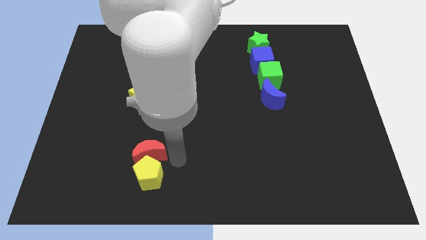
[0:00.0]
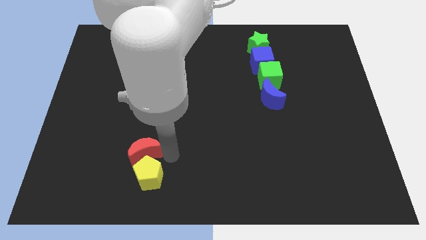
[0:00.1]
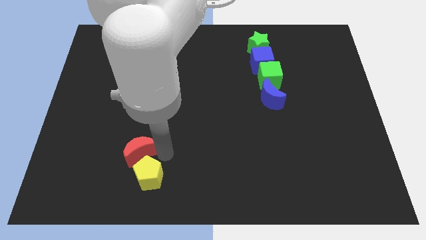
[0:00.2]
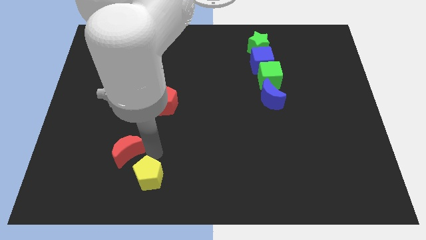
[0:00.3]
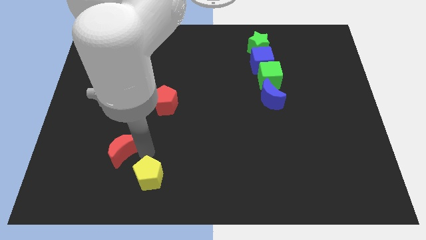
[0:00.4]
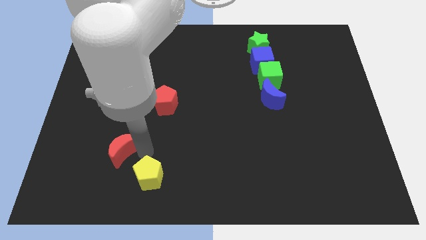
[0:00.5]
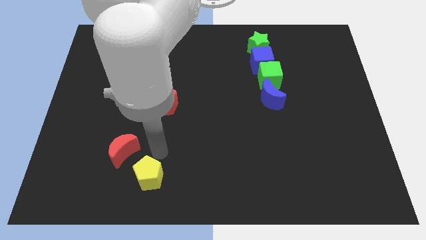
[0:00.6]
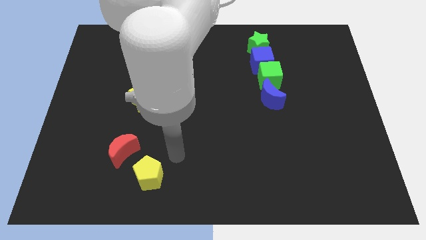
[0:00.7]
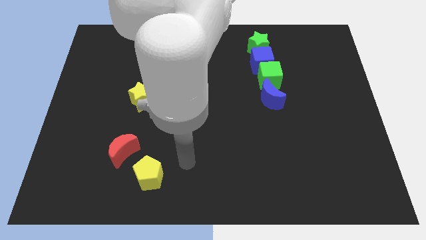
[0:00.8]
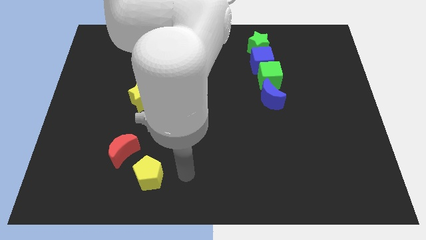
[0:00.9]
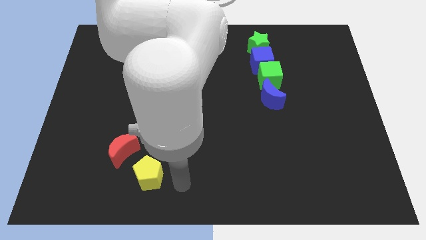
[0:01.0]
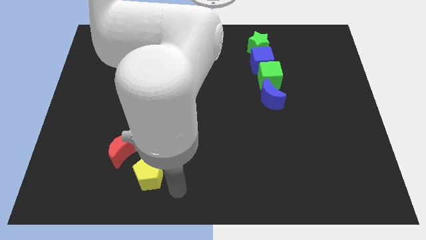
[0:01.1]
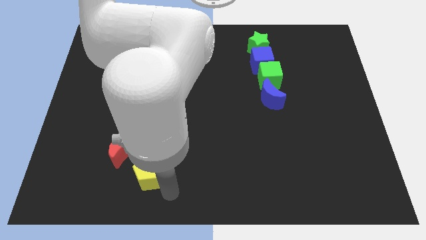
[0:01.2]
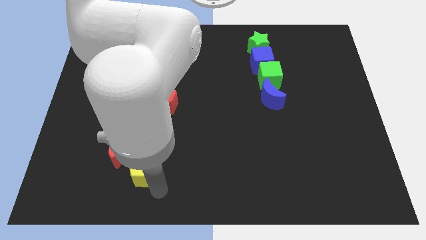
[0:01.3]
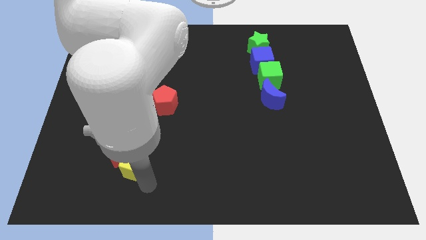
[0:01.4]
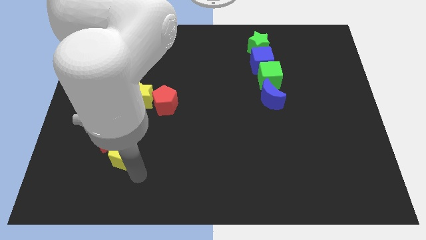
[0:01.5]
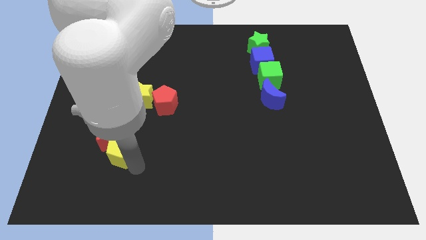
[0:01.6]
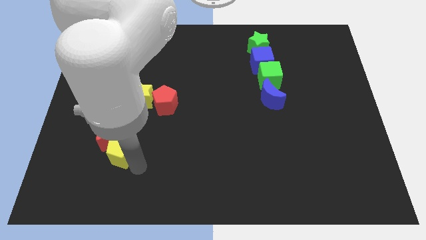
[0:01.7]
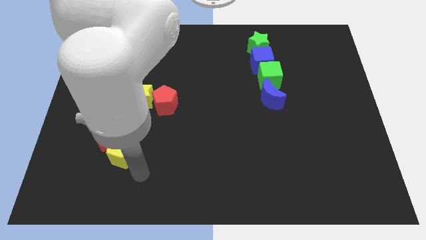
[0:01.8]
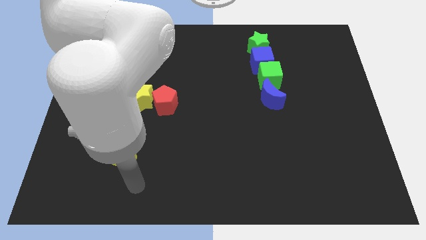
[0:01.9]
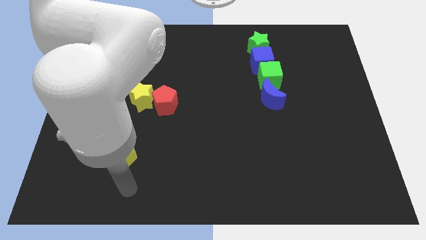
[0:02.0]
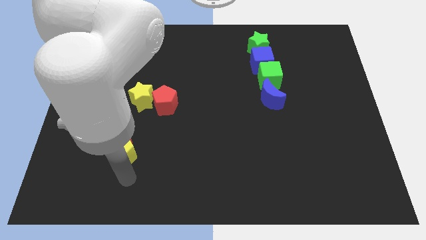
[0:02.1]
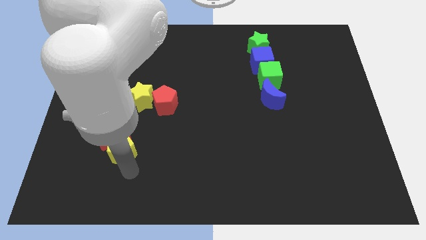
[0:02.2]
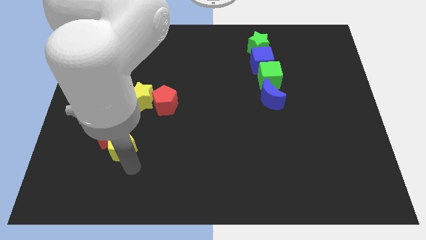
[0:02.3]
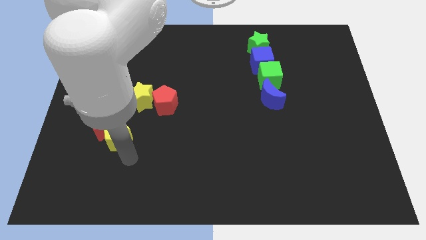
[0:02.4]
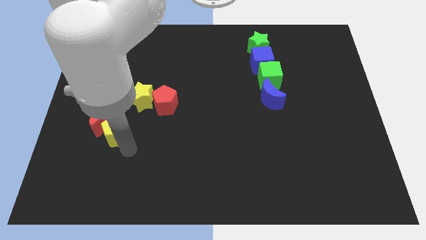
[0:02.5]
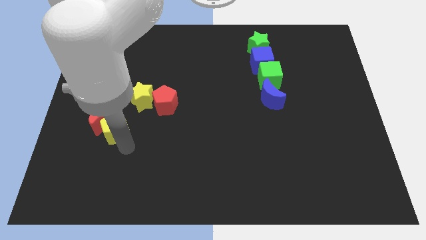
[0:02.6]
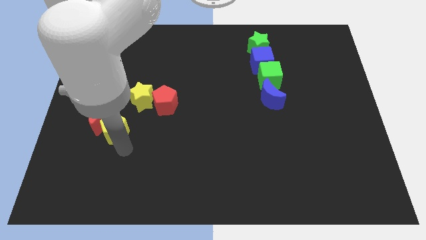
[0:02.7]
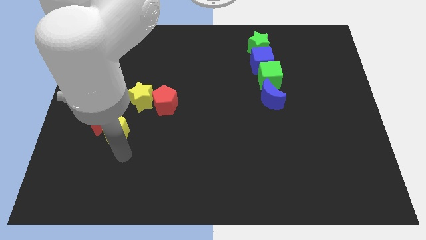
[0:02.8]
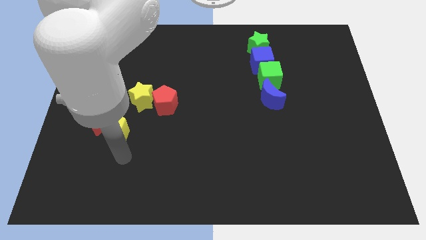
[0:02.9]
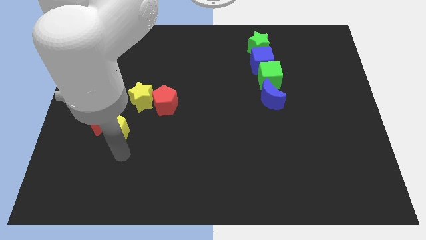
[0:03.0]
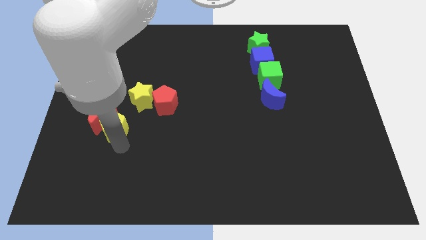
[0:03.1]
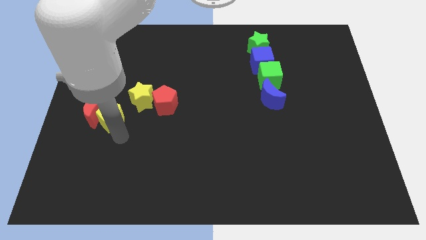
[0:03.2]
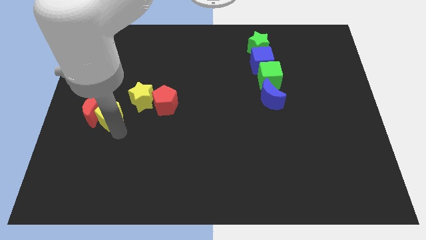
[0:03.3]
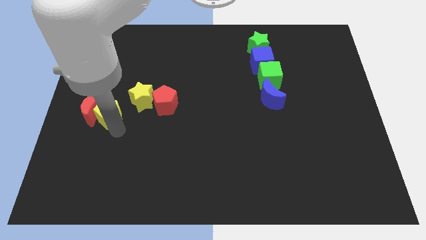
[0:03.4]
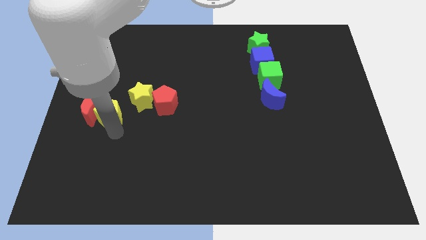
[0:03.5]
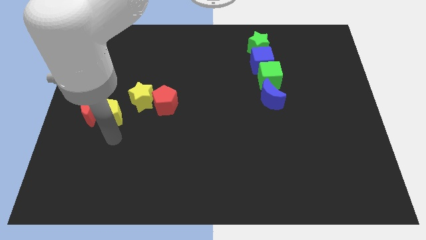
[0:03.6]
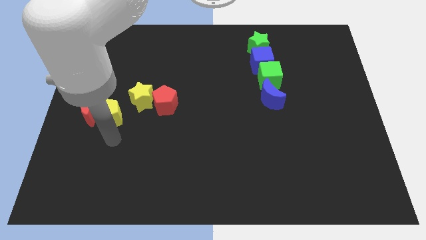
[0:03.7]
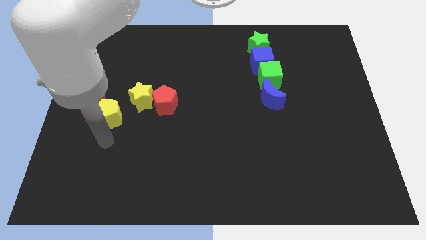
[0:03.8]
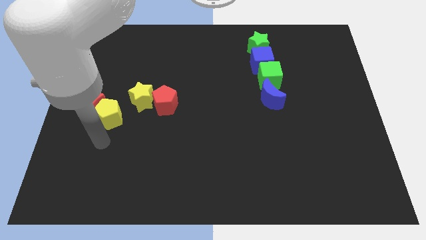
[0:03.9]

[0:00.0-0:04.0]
push the red crescent with the yellow pentagon to the left center of the board

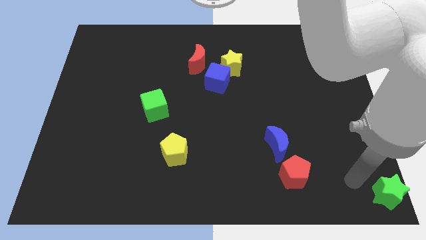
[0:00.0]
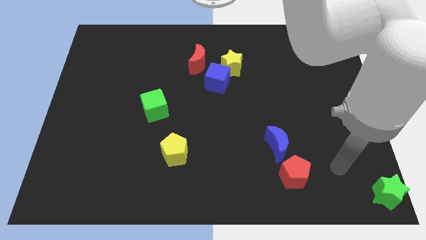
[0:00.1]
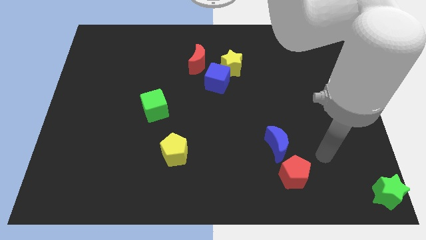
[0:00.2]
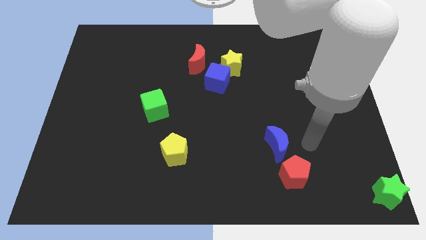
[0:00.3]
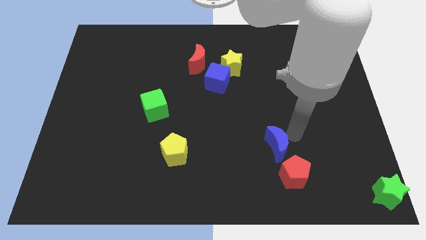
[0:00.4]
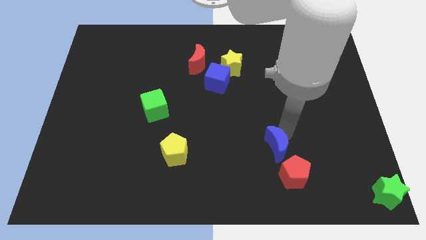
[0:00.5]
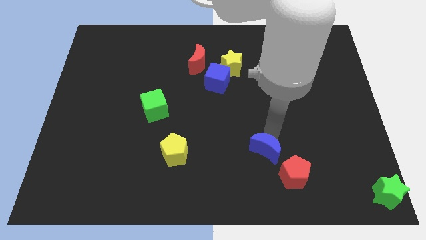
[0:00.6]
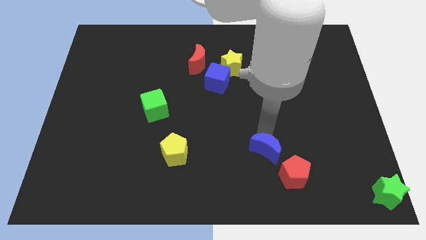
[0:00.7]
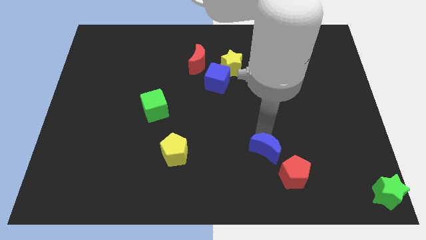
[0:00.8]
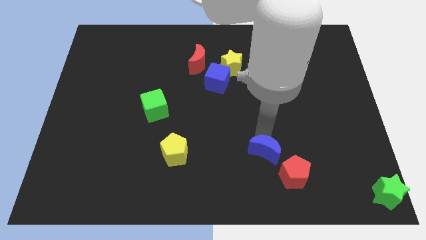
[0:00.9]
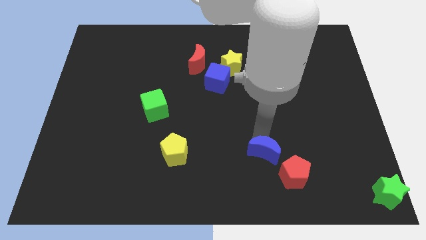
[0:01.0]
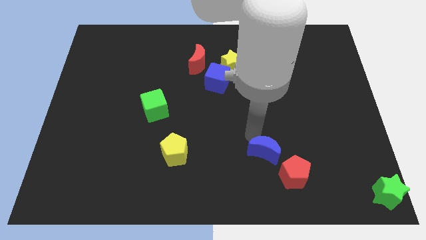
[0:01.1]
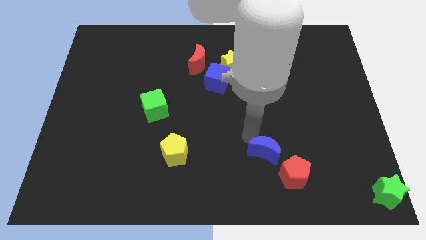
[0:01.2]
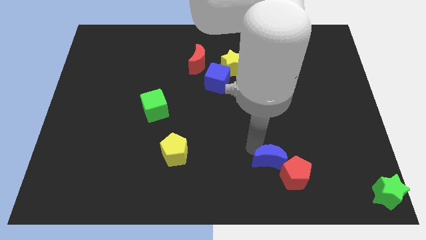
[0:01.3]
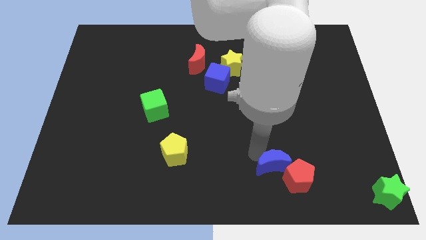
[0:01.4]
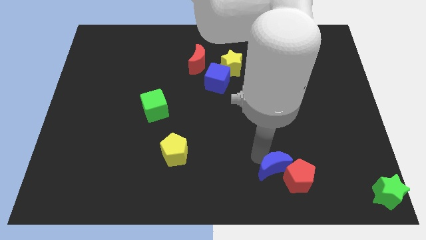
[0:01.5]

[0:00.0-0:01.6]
move the blue crescent into the red pentagon

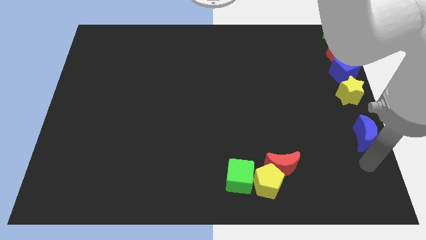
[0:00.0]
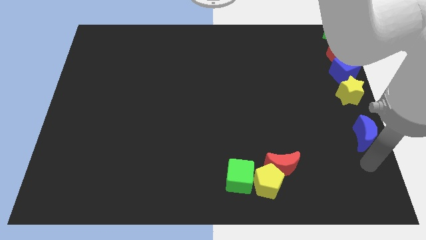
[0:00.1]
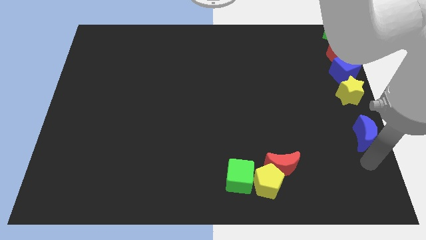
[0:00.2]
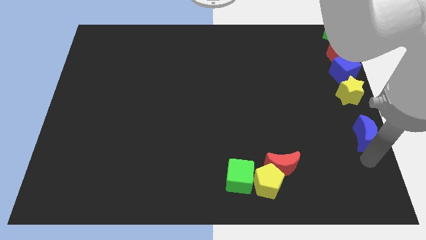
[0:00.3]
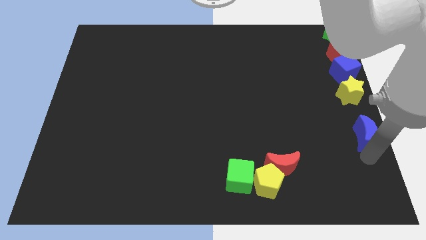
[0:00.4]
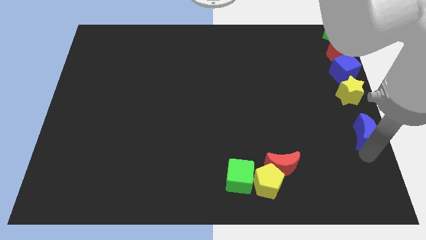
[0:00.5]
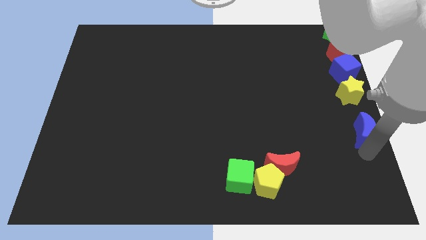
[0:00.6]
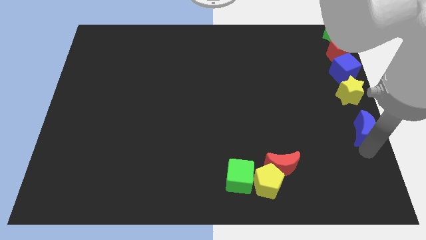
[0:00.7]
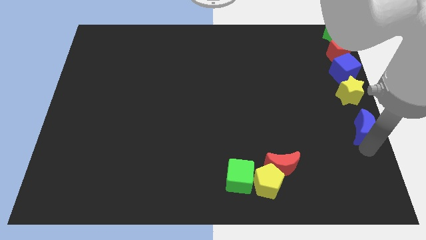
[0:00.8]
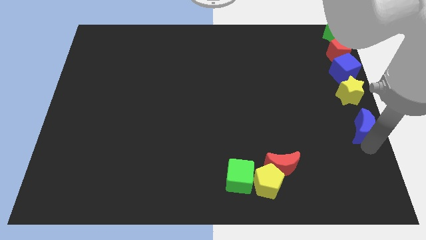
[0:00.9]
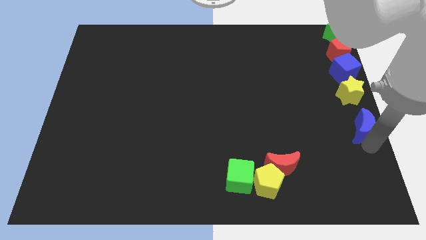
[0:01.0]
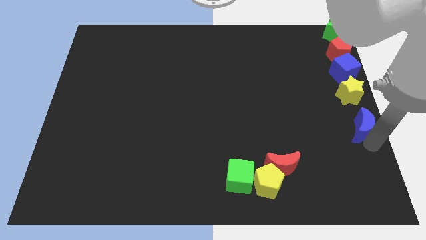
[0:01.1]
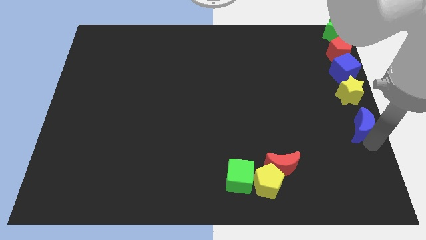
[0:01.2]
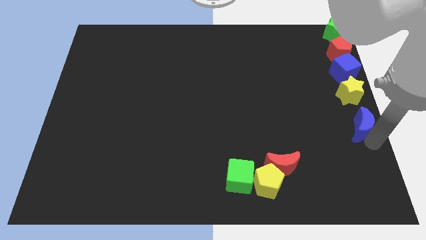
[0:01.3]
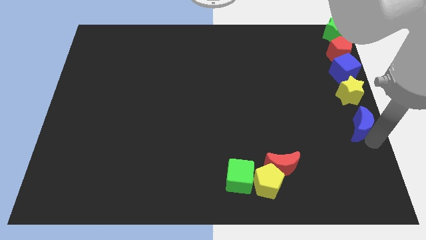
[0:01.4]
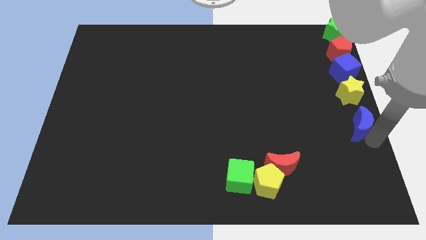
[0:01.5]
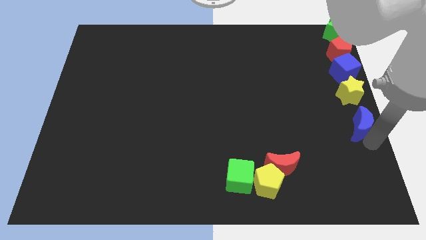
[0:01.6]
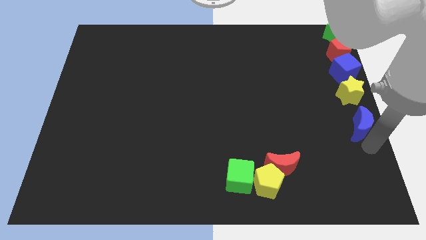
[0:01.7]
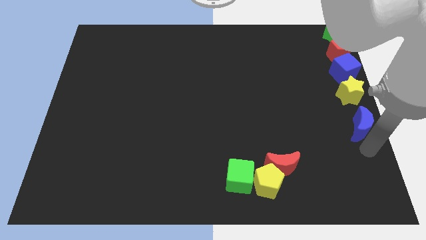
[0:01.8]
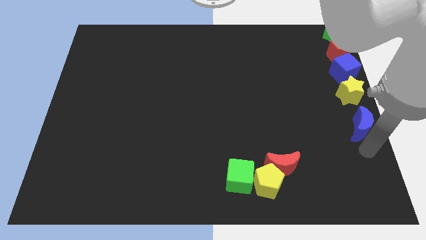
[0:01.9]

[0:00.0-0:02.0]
place the blue crescent towards the bottom of the yellow star

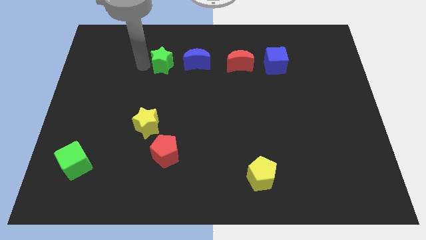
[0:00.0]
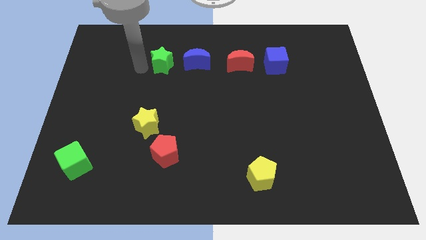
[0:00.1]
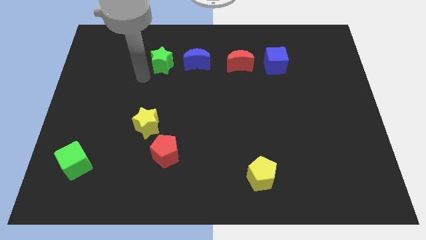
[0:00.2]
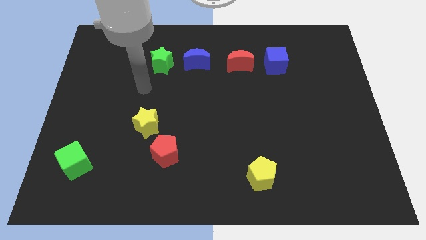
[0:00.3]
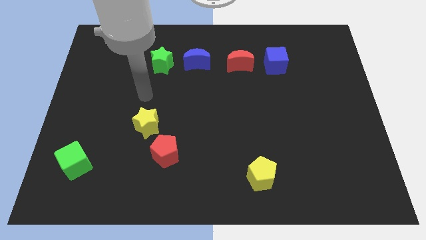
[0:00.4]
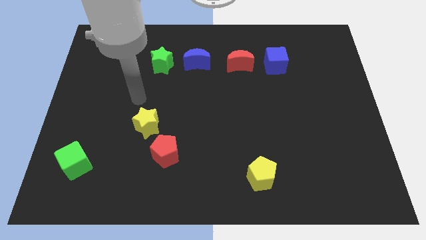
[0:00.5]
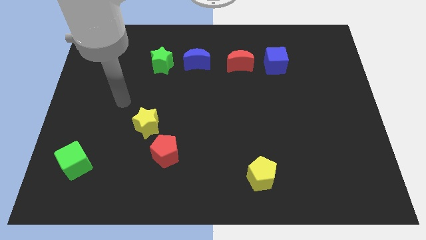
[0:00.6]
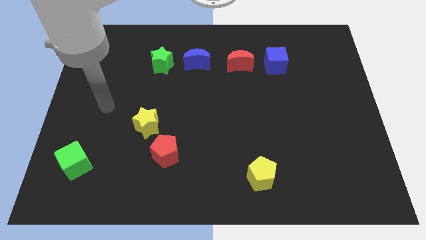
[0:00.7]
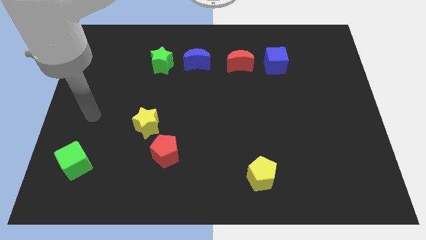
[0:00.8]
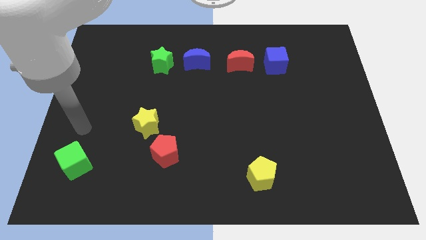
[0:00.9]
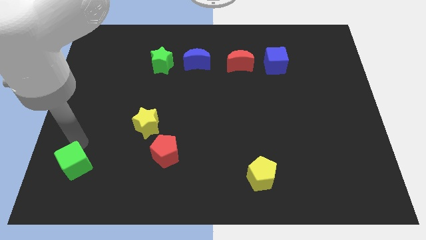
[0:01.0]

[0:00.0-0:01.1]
move your arm towards the green cube

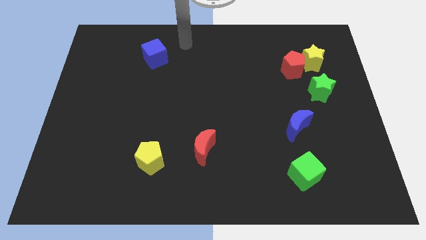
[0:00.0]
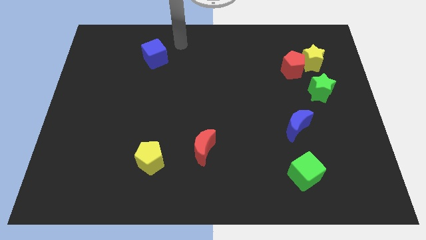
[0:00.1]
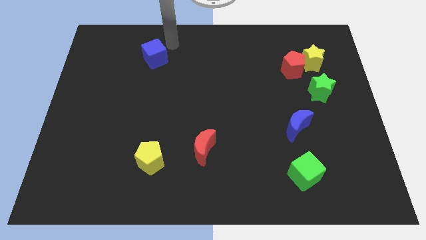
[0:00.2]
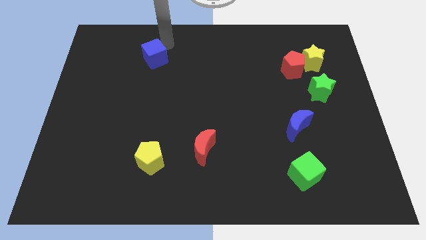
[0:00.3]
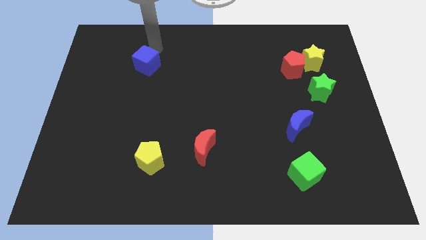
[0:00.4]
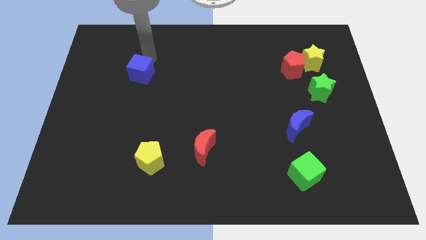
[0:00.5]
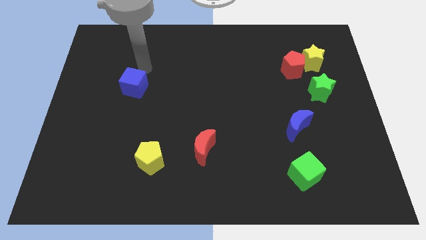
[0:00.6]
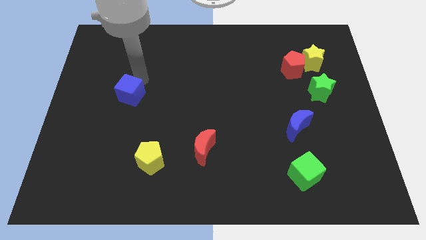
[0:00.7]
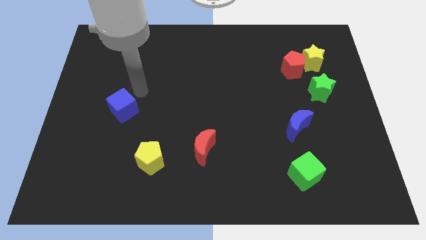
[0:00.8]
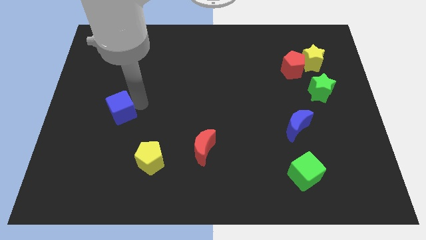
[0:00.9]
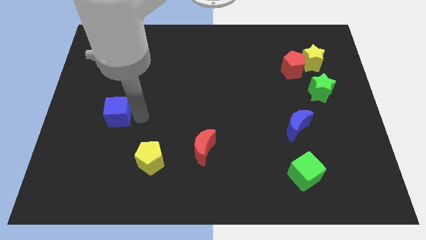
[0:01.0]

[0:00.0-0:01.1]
slide blue cube to the top left of yellow pentagon
